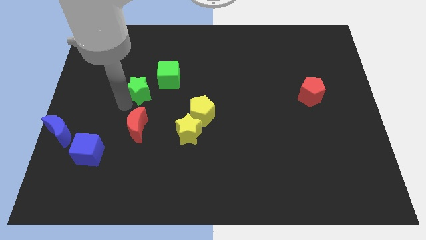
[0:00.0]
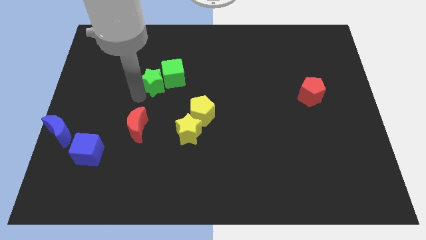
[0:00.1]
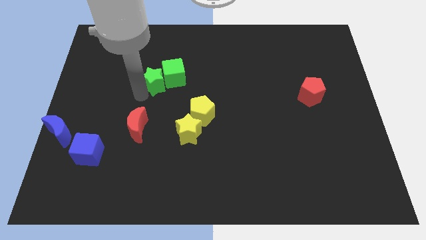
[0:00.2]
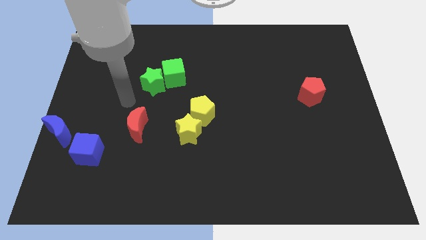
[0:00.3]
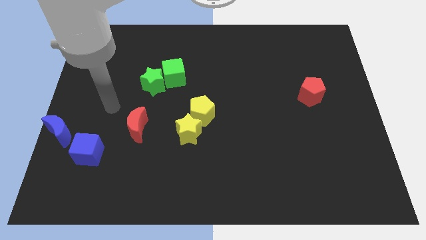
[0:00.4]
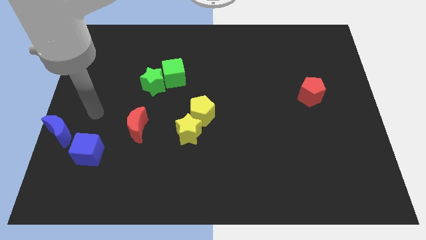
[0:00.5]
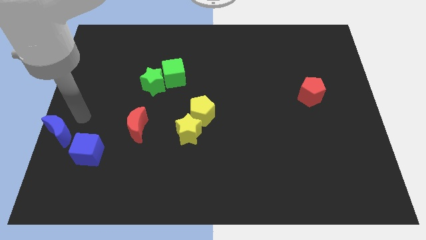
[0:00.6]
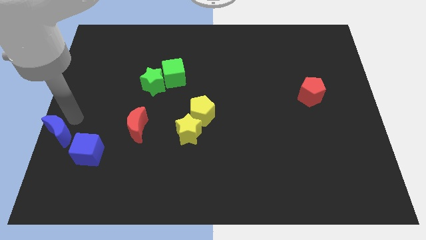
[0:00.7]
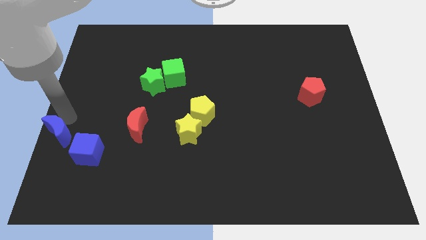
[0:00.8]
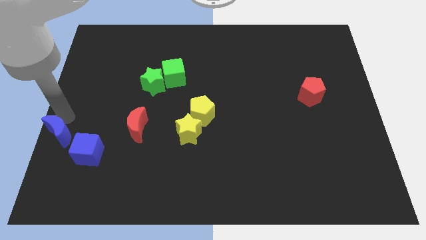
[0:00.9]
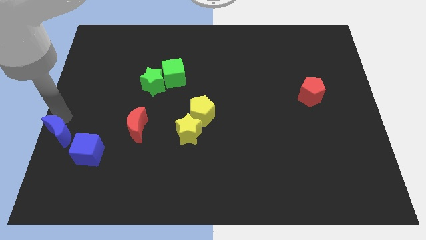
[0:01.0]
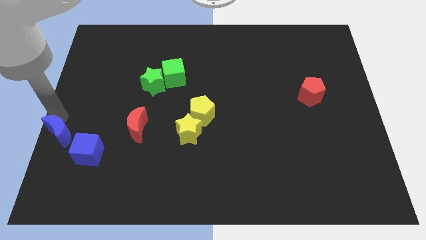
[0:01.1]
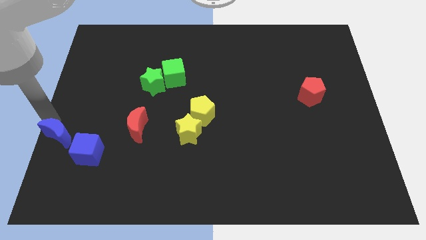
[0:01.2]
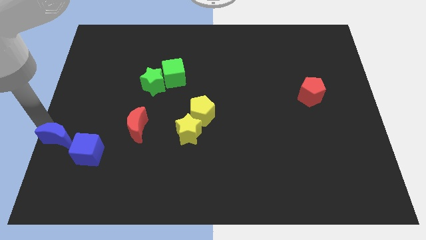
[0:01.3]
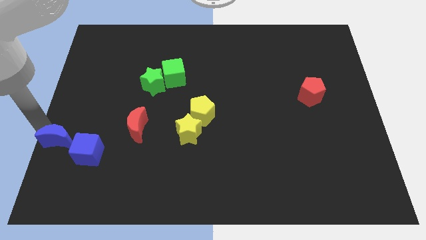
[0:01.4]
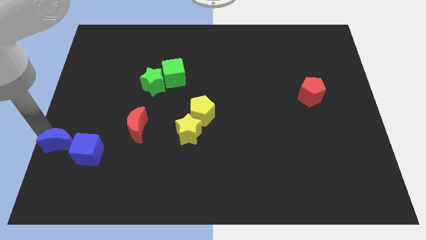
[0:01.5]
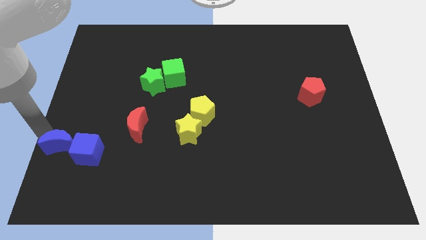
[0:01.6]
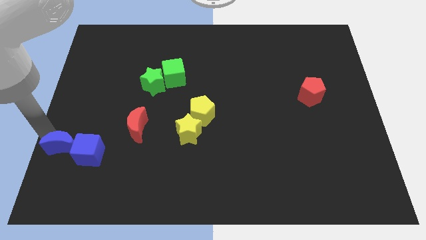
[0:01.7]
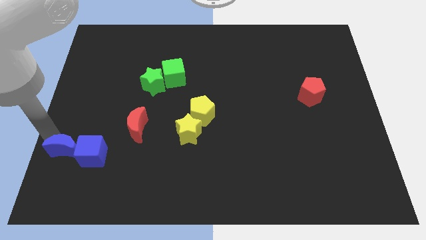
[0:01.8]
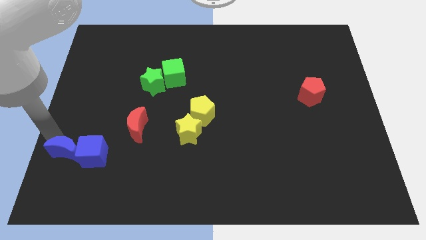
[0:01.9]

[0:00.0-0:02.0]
push the blue moon into the blue cube

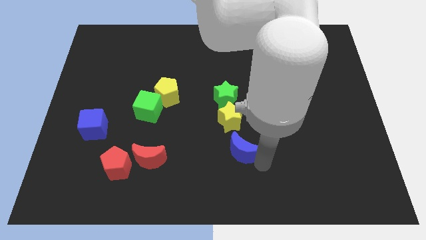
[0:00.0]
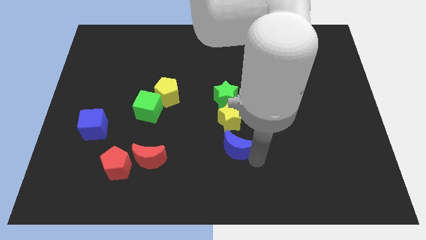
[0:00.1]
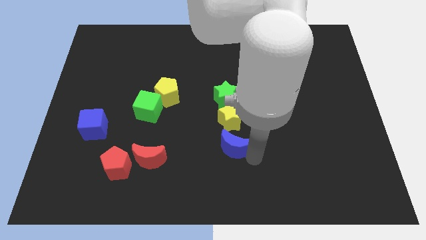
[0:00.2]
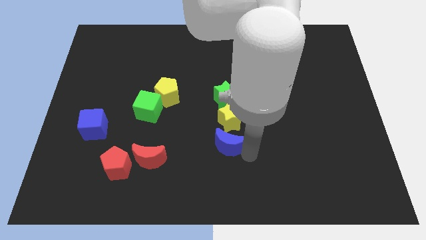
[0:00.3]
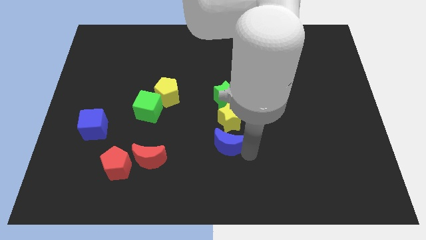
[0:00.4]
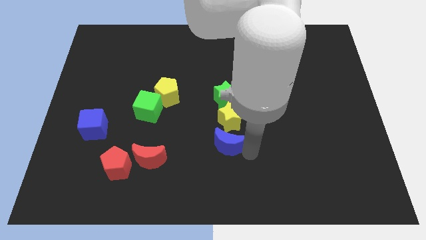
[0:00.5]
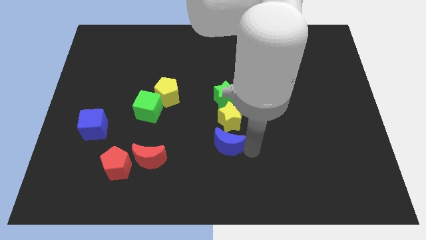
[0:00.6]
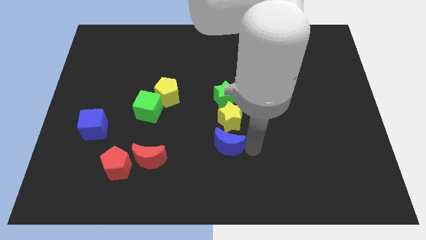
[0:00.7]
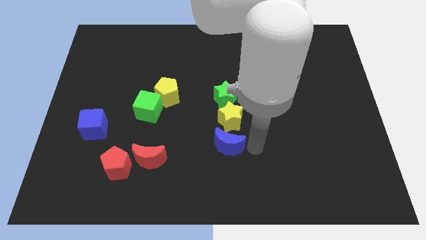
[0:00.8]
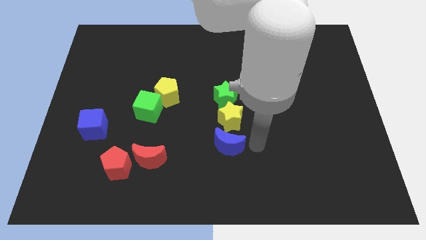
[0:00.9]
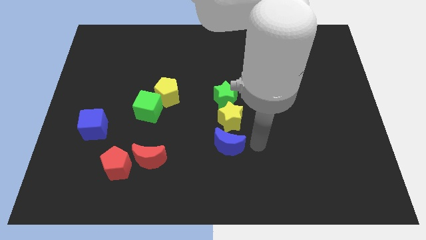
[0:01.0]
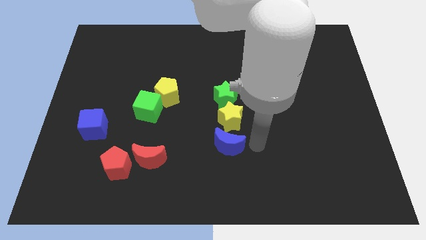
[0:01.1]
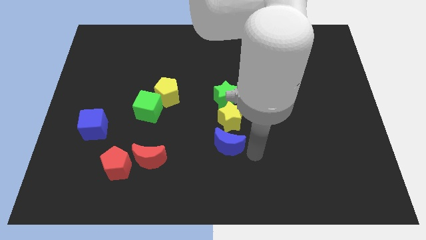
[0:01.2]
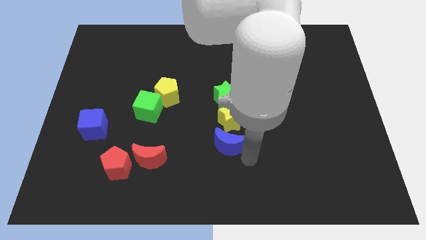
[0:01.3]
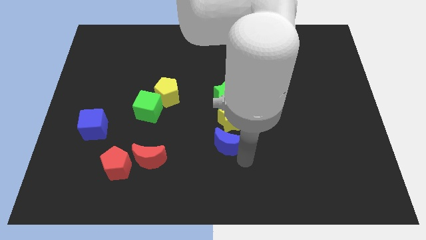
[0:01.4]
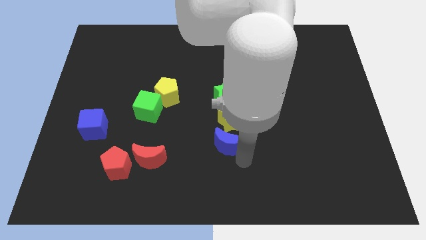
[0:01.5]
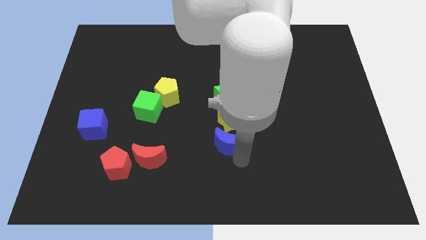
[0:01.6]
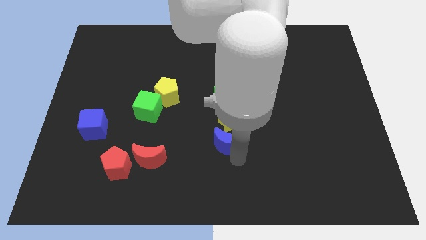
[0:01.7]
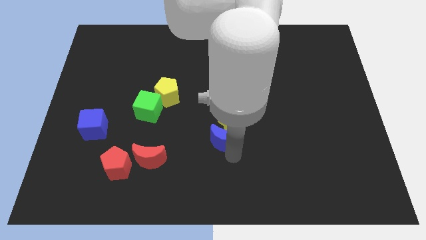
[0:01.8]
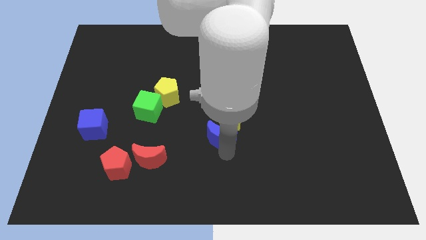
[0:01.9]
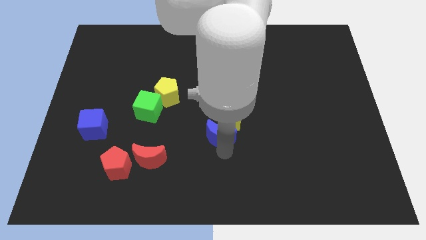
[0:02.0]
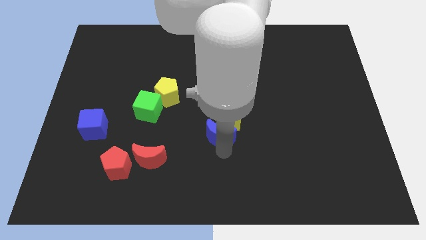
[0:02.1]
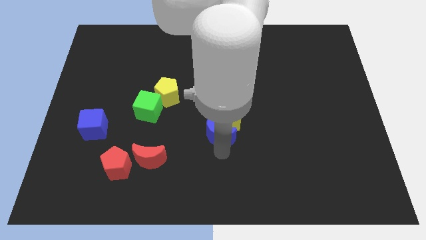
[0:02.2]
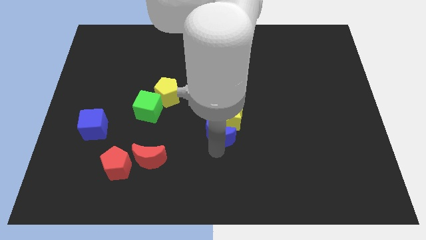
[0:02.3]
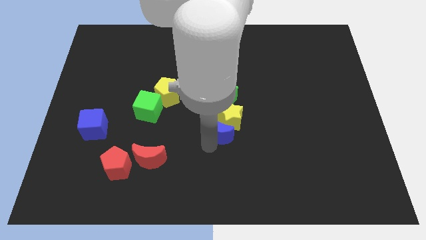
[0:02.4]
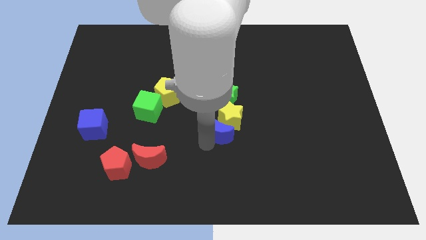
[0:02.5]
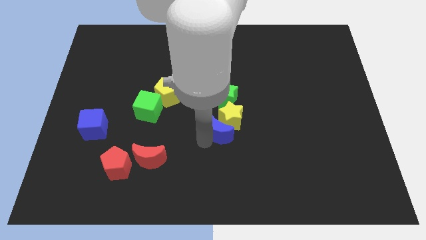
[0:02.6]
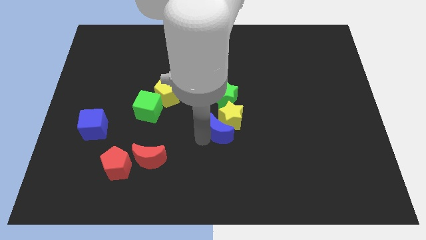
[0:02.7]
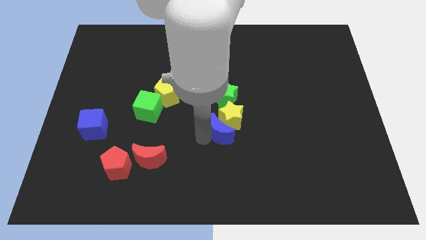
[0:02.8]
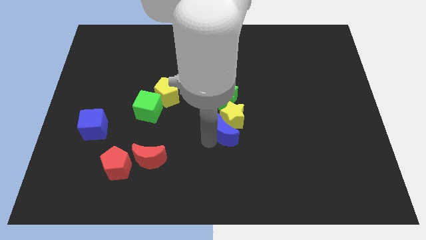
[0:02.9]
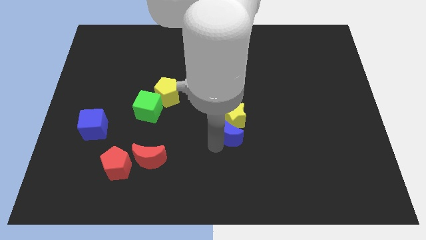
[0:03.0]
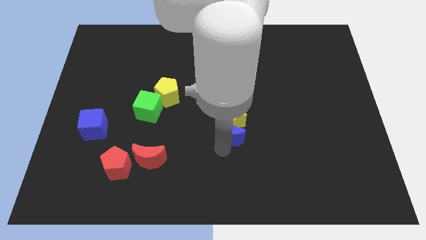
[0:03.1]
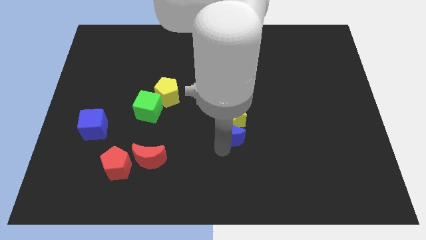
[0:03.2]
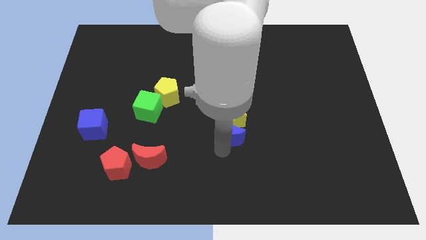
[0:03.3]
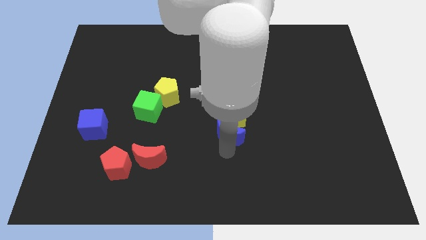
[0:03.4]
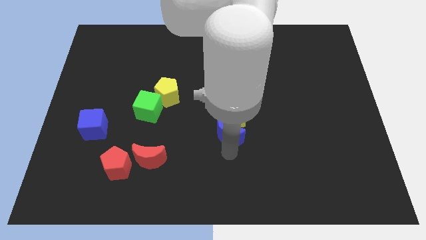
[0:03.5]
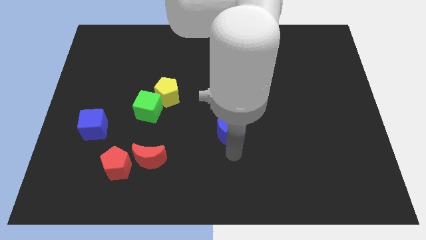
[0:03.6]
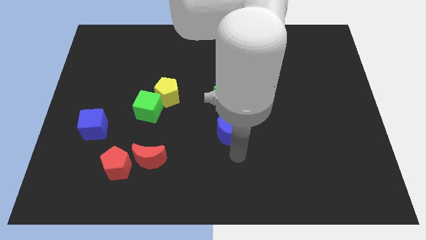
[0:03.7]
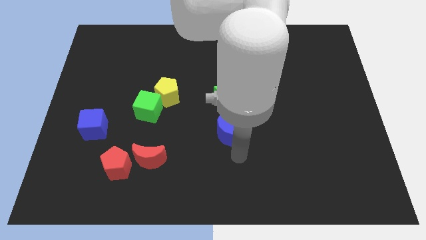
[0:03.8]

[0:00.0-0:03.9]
push the blue moon into yellow star

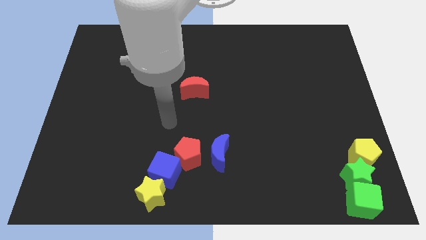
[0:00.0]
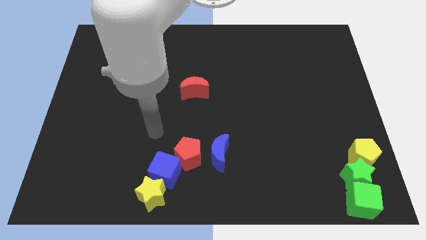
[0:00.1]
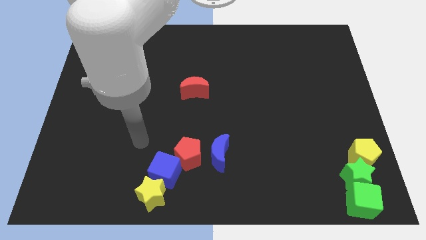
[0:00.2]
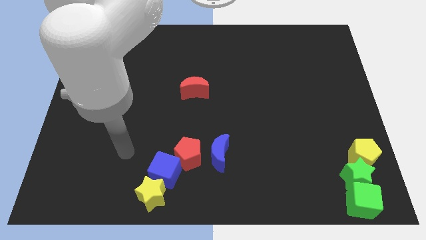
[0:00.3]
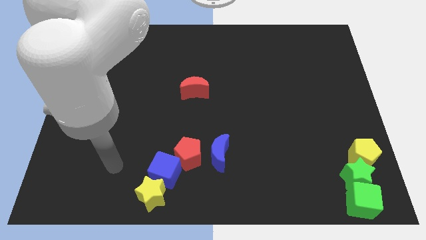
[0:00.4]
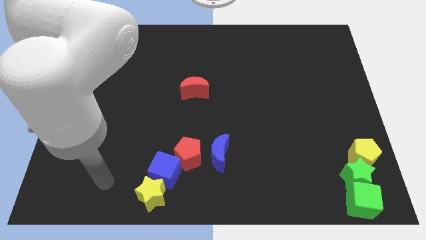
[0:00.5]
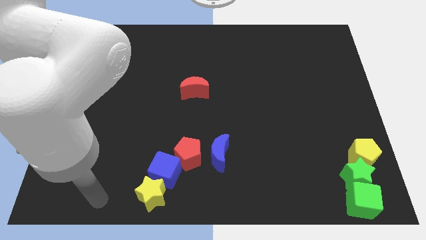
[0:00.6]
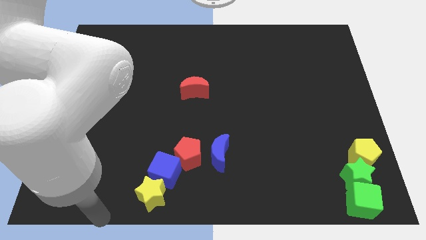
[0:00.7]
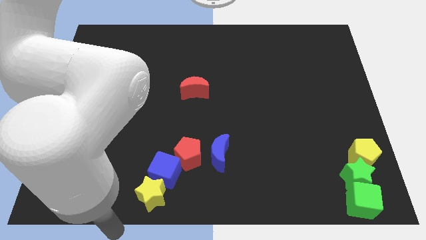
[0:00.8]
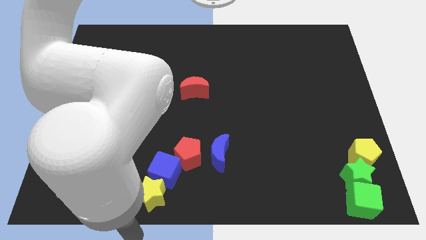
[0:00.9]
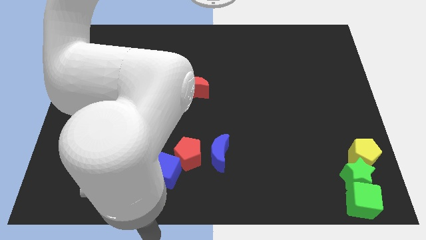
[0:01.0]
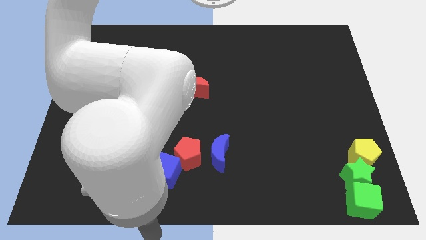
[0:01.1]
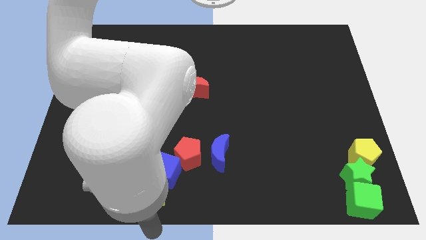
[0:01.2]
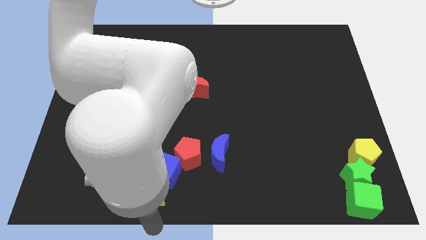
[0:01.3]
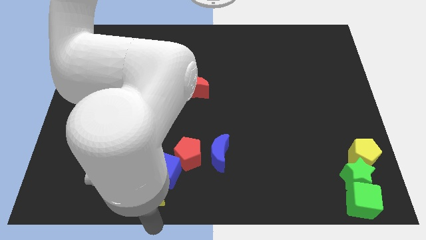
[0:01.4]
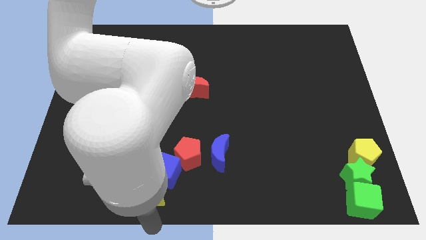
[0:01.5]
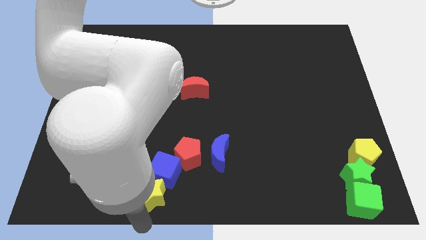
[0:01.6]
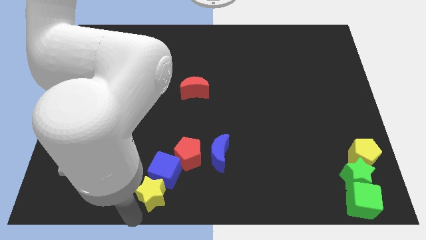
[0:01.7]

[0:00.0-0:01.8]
move your arm to the bottom of yellow star

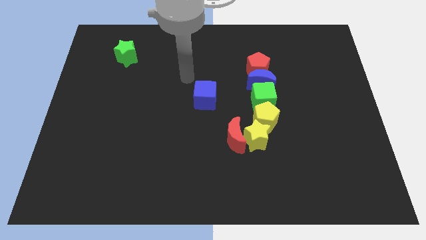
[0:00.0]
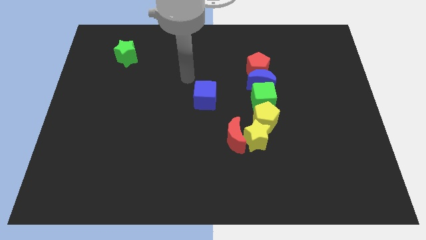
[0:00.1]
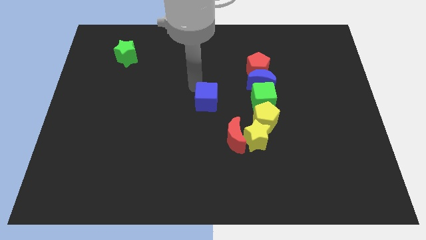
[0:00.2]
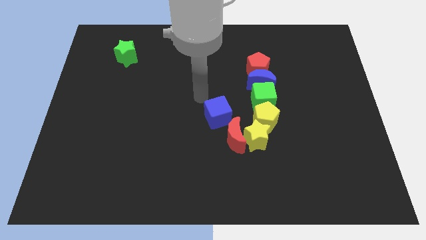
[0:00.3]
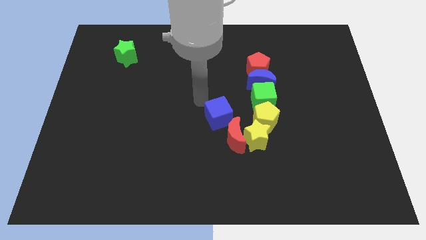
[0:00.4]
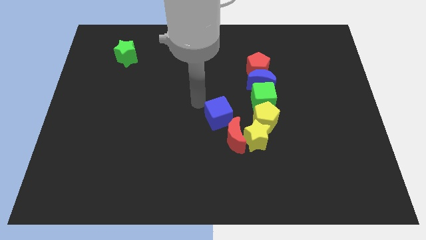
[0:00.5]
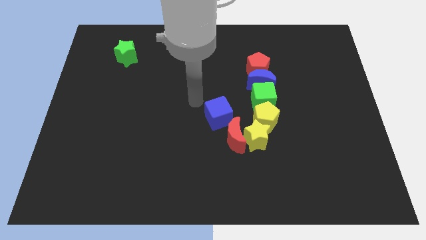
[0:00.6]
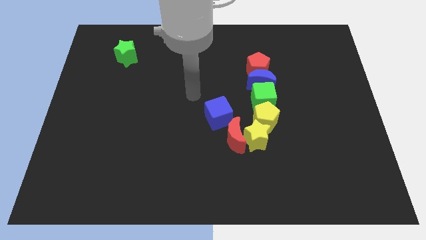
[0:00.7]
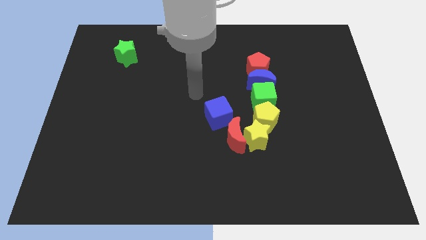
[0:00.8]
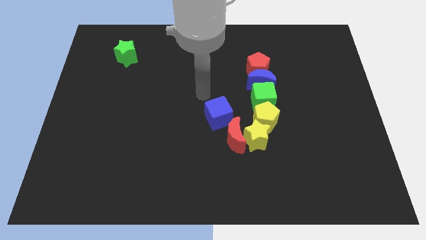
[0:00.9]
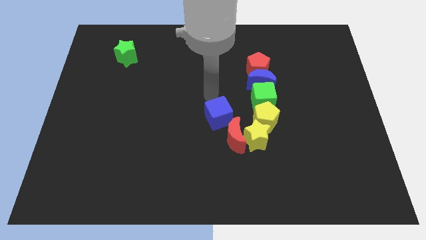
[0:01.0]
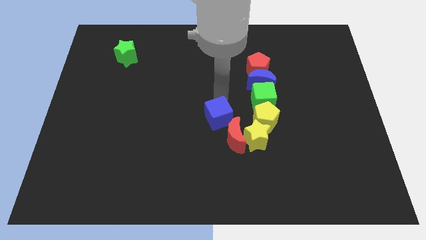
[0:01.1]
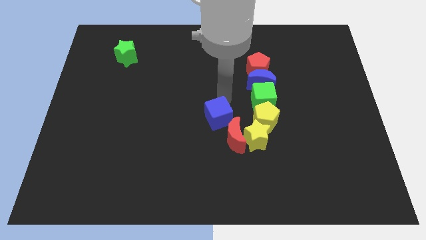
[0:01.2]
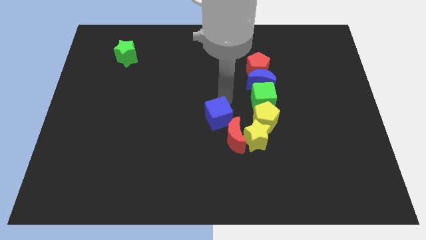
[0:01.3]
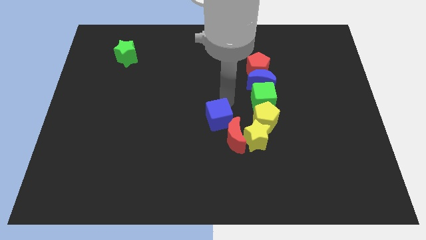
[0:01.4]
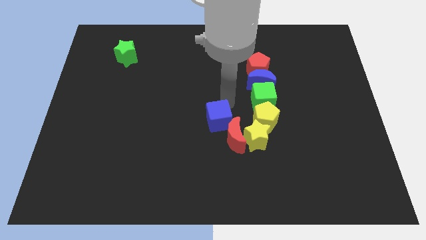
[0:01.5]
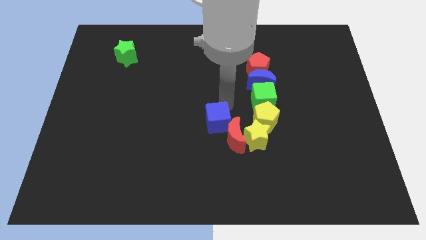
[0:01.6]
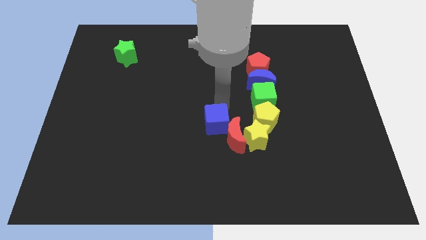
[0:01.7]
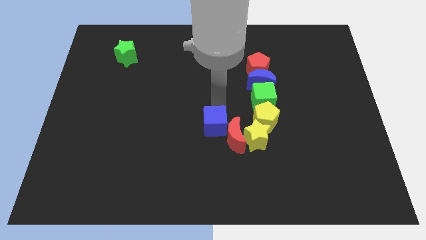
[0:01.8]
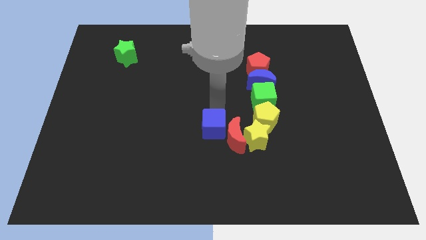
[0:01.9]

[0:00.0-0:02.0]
move the blue cube to the top left side of the red moon
